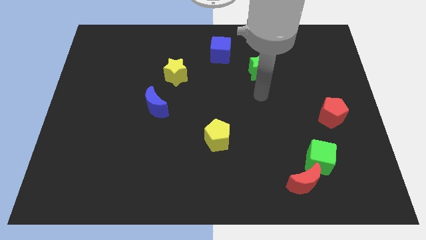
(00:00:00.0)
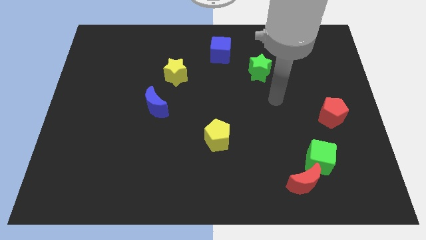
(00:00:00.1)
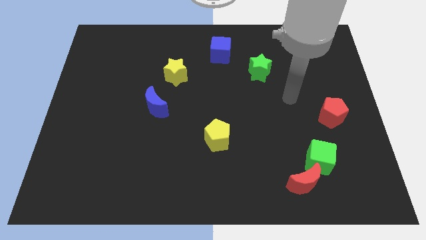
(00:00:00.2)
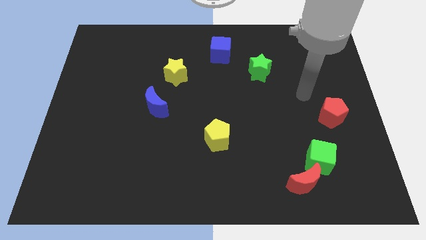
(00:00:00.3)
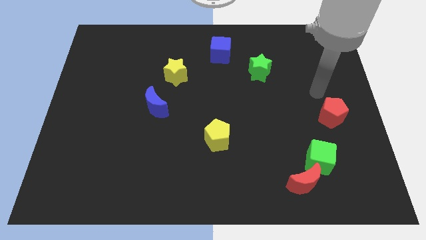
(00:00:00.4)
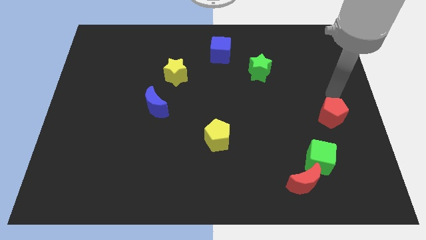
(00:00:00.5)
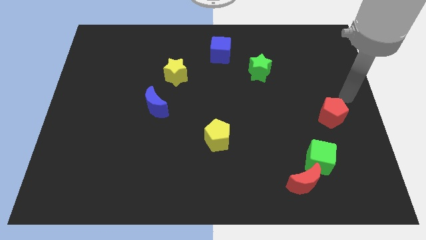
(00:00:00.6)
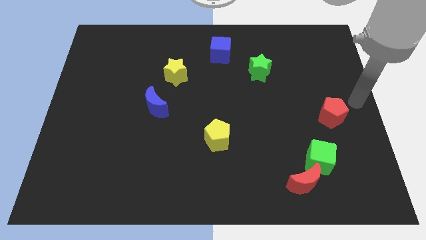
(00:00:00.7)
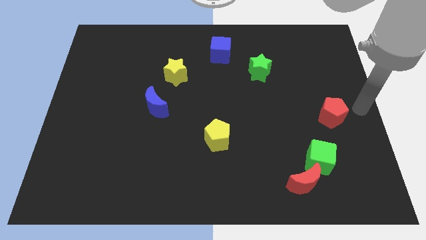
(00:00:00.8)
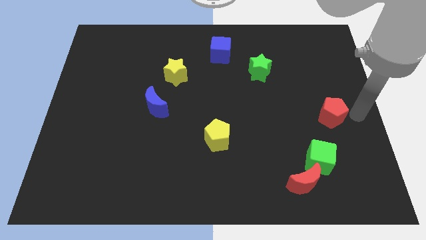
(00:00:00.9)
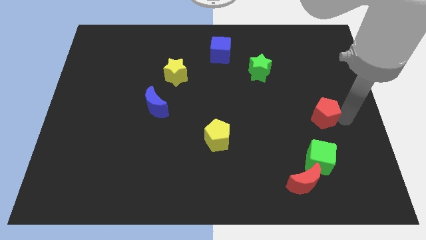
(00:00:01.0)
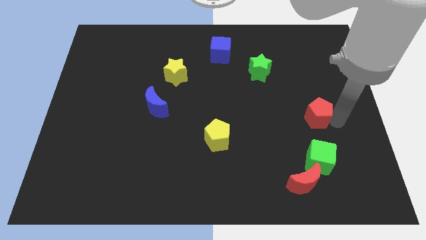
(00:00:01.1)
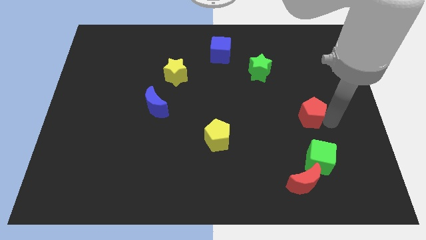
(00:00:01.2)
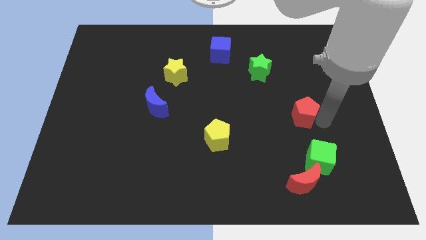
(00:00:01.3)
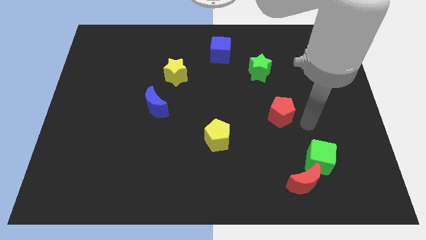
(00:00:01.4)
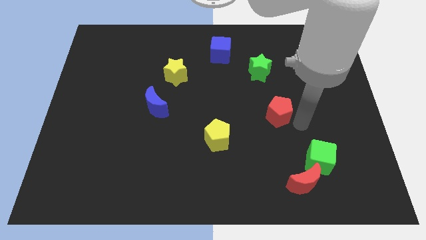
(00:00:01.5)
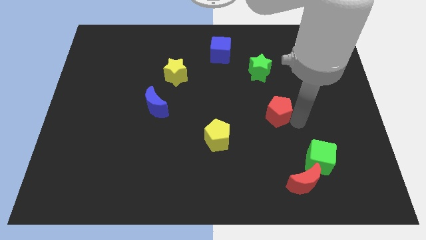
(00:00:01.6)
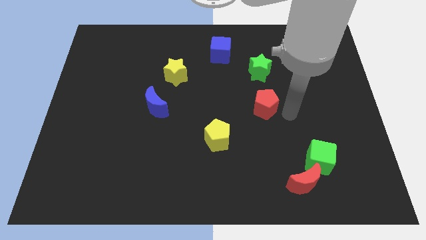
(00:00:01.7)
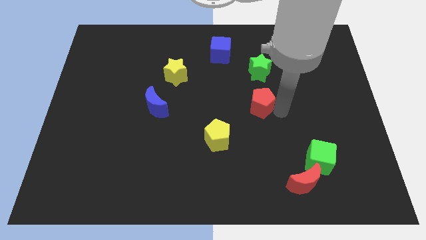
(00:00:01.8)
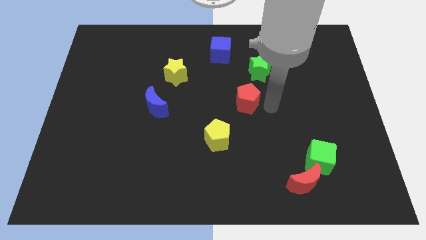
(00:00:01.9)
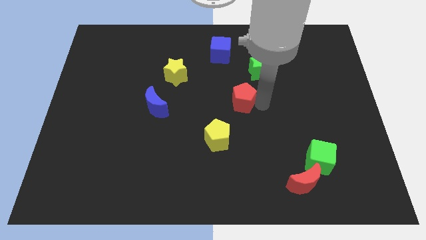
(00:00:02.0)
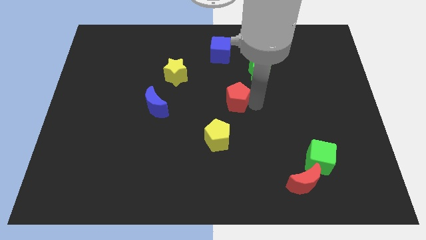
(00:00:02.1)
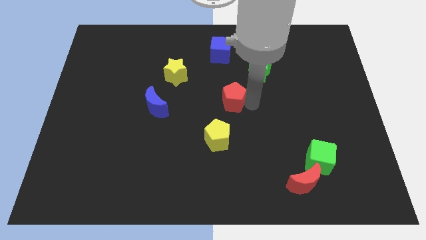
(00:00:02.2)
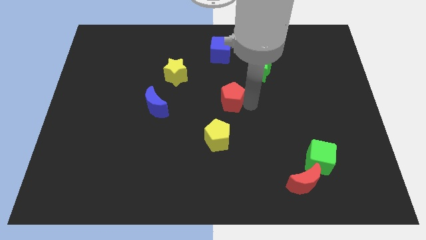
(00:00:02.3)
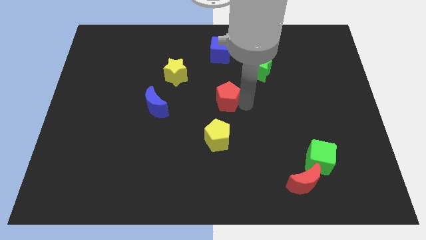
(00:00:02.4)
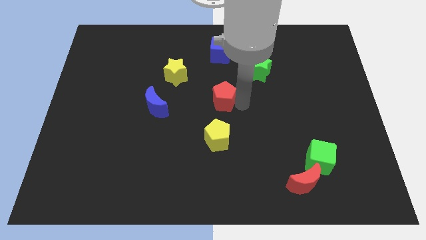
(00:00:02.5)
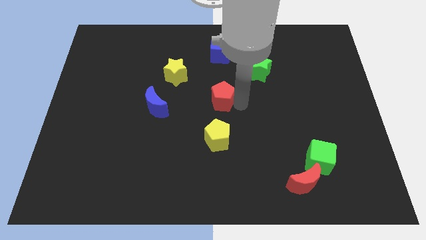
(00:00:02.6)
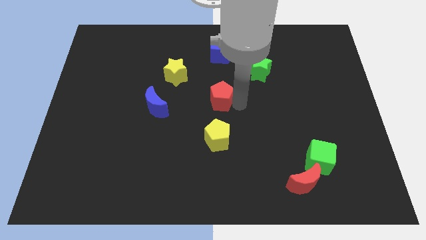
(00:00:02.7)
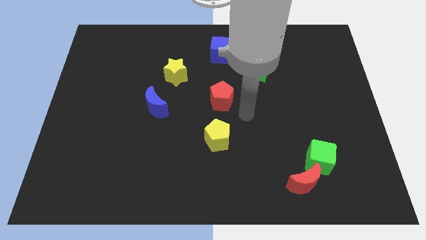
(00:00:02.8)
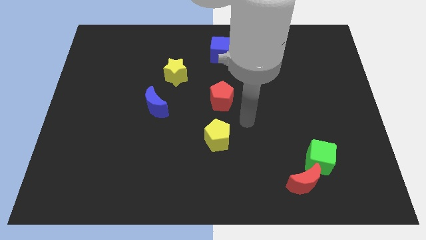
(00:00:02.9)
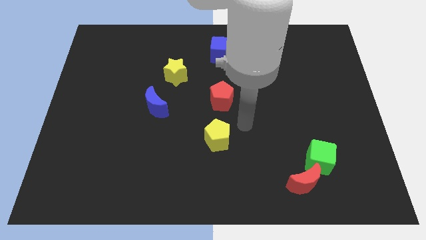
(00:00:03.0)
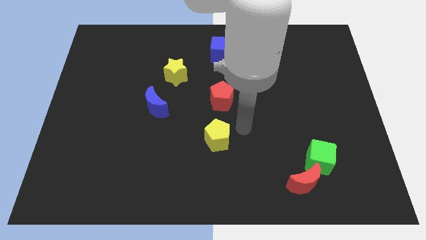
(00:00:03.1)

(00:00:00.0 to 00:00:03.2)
push the red pentagon to the center of the board

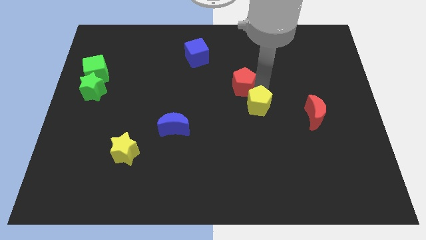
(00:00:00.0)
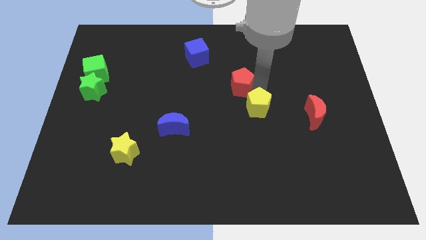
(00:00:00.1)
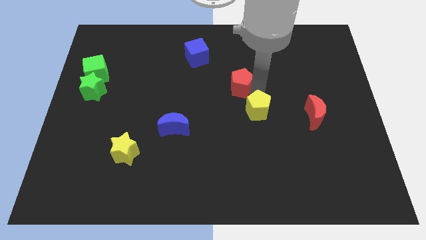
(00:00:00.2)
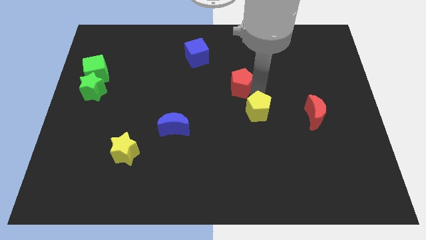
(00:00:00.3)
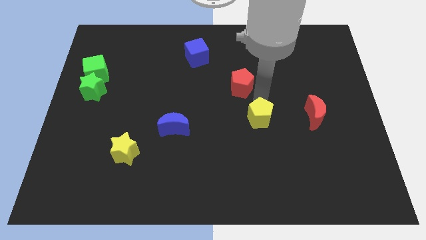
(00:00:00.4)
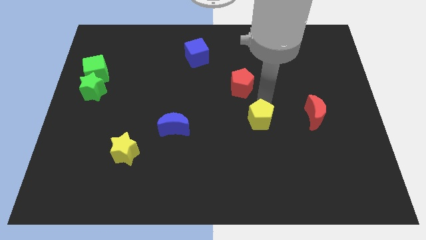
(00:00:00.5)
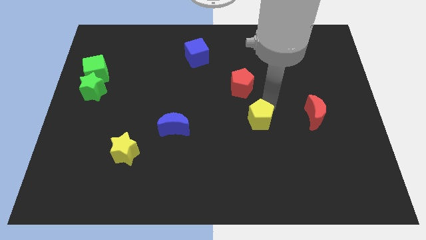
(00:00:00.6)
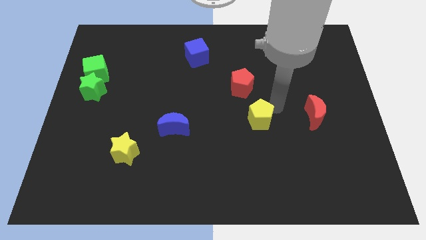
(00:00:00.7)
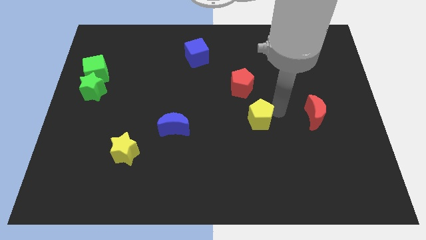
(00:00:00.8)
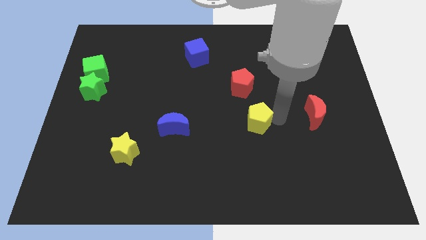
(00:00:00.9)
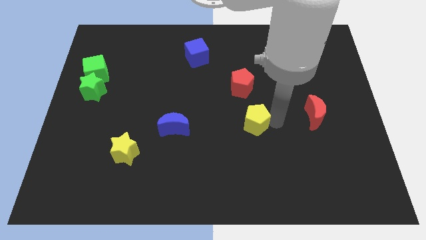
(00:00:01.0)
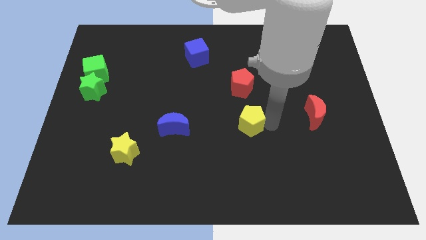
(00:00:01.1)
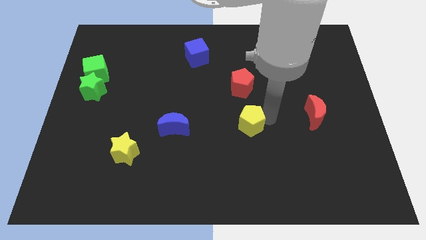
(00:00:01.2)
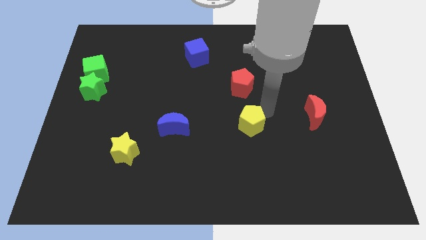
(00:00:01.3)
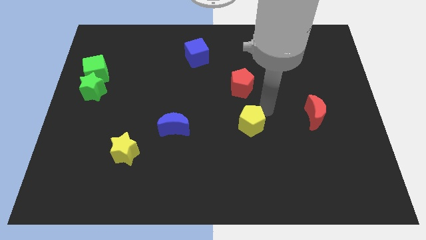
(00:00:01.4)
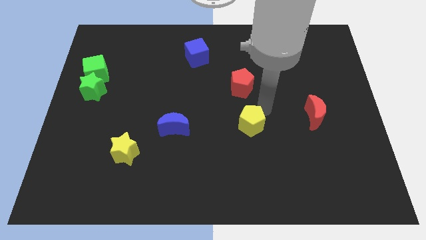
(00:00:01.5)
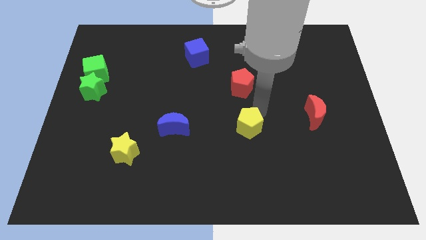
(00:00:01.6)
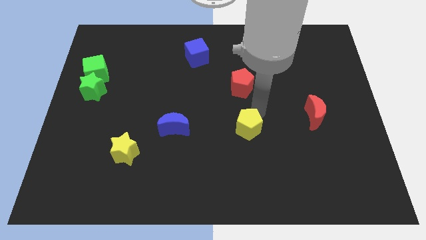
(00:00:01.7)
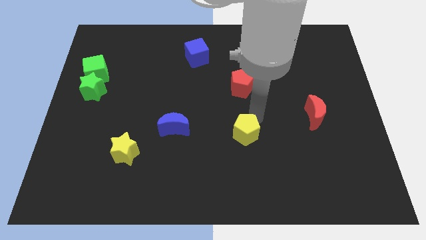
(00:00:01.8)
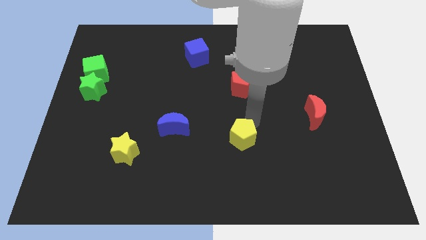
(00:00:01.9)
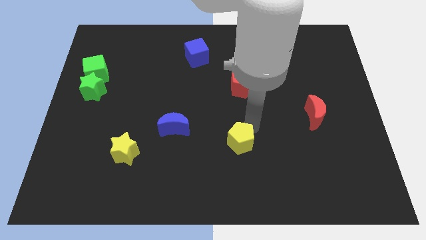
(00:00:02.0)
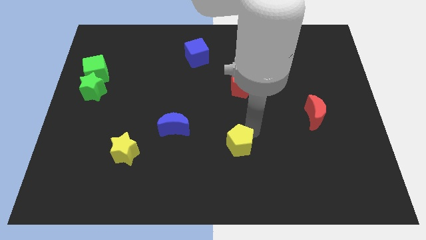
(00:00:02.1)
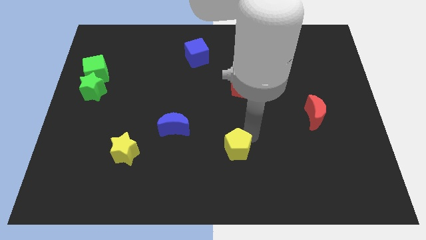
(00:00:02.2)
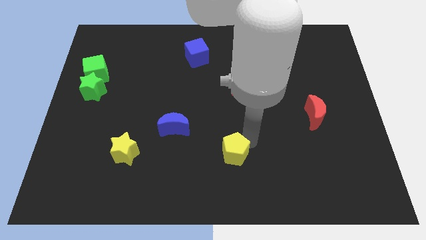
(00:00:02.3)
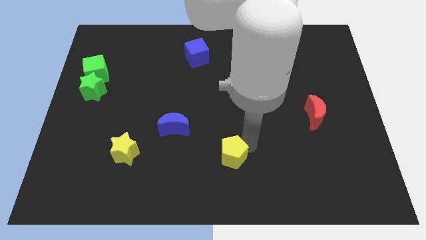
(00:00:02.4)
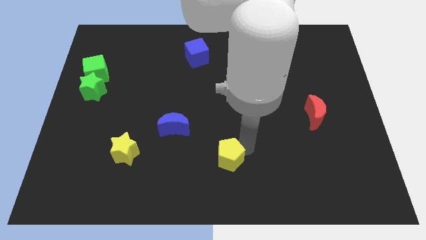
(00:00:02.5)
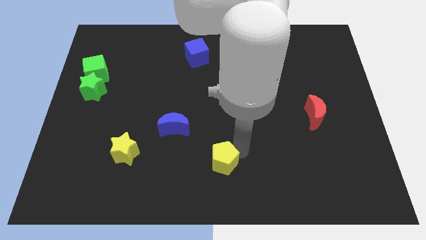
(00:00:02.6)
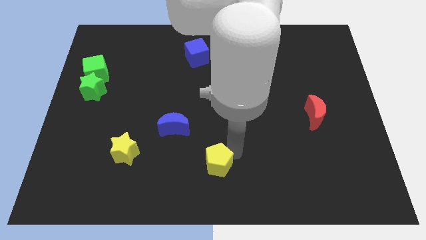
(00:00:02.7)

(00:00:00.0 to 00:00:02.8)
move the yellow pentagon to the right of the yellow star

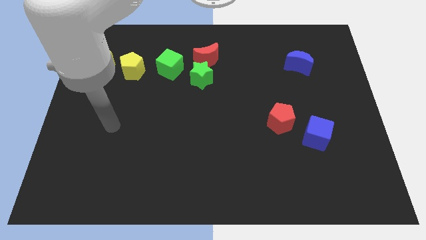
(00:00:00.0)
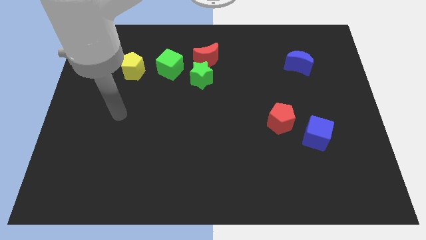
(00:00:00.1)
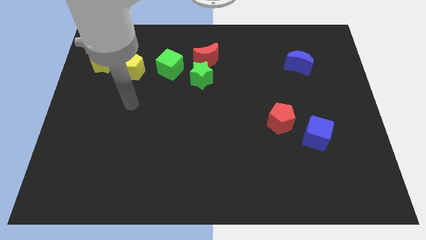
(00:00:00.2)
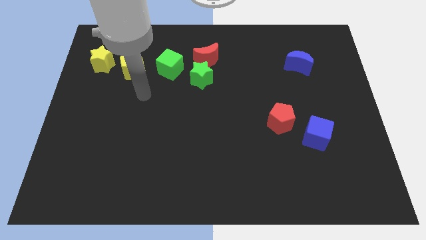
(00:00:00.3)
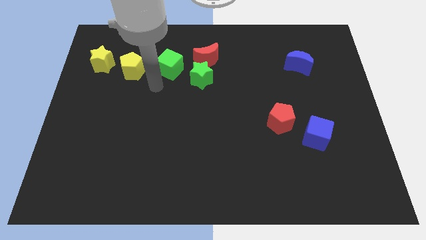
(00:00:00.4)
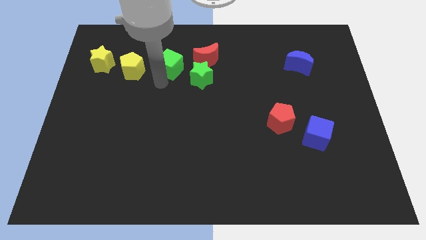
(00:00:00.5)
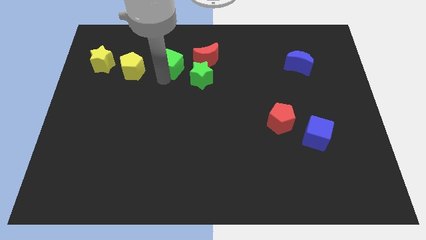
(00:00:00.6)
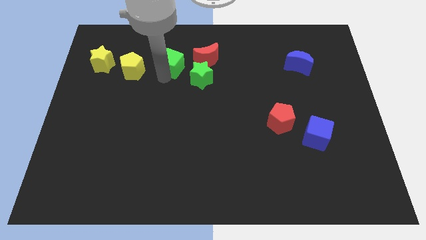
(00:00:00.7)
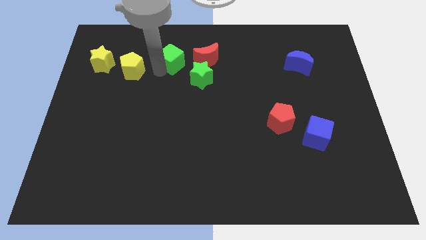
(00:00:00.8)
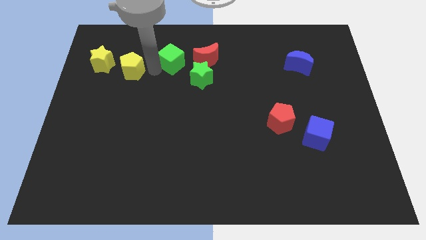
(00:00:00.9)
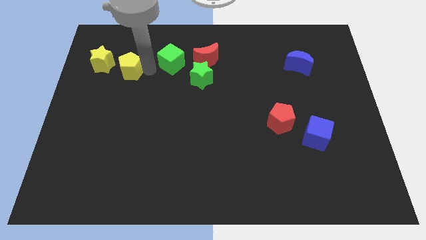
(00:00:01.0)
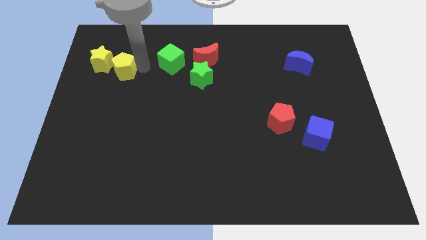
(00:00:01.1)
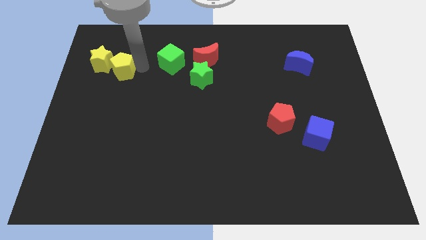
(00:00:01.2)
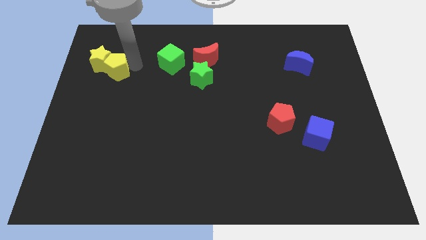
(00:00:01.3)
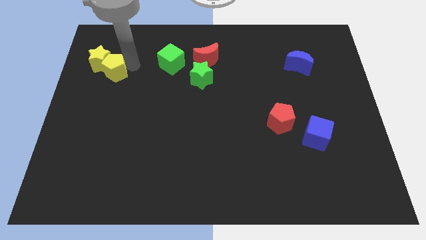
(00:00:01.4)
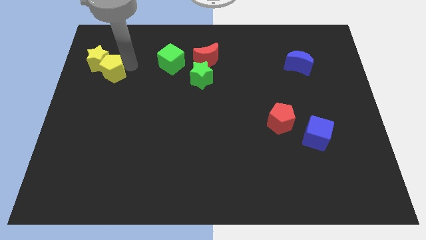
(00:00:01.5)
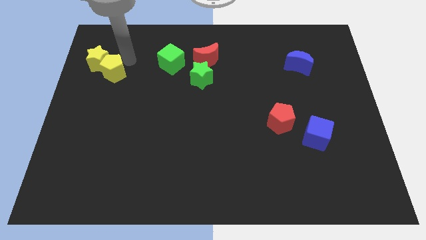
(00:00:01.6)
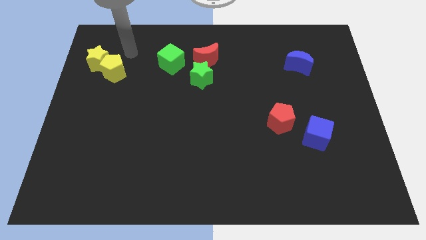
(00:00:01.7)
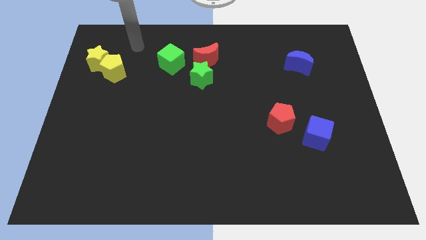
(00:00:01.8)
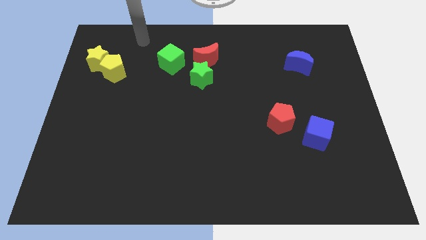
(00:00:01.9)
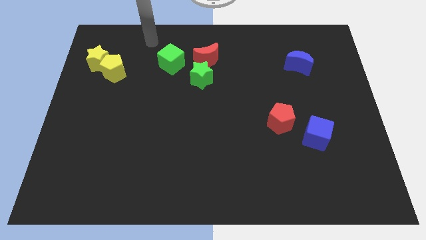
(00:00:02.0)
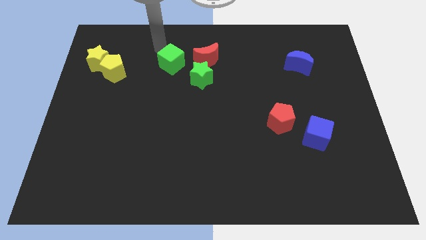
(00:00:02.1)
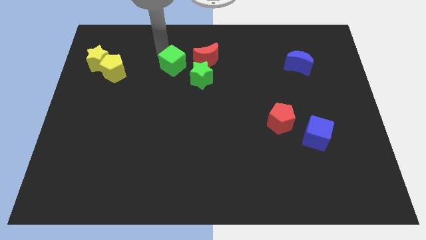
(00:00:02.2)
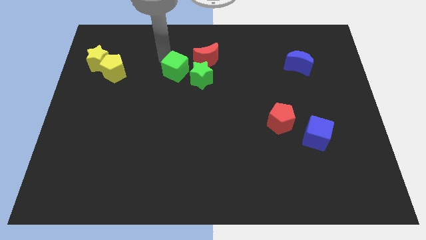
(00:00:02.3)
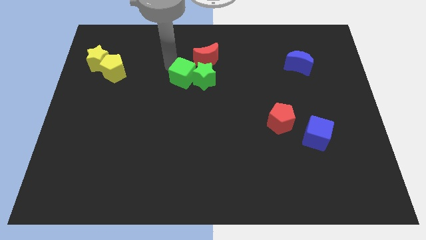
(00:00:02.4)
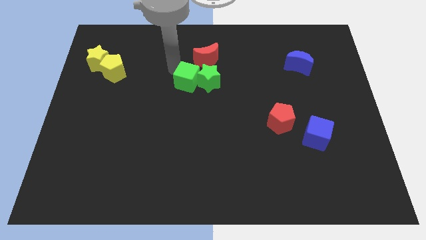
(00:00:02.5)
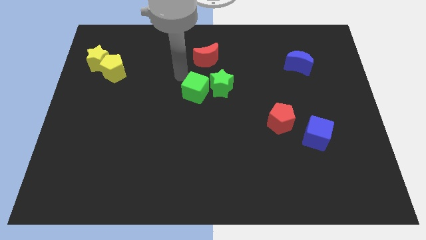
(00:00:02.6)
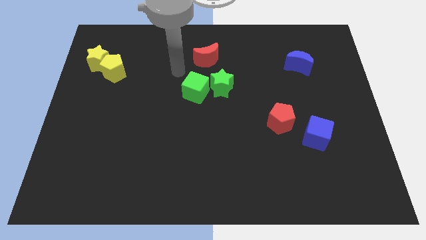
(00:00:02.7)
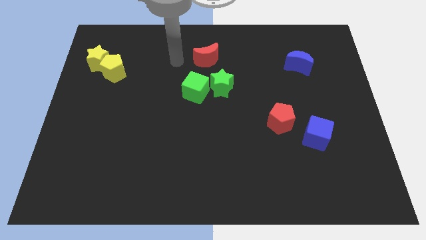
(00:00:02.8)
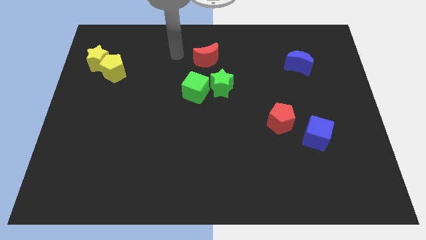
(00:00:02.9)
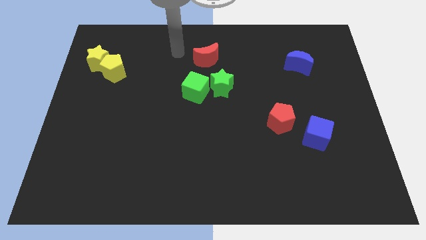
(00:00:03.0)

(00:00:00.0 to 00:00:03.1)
put the yellow blocks and green blocks together
